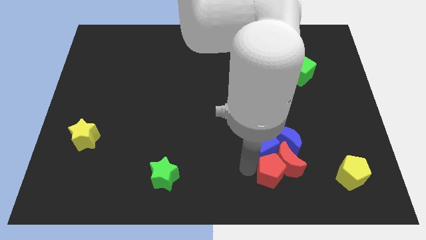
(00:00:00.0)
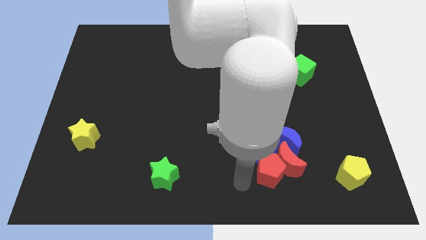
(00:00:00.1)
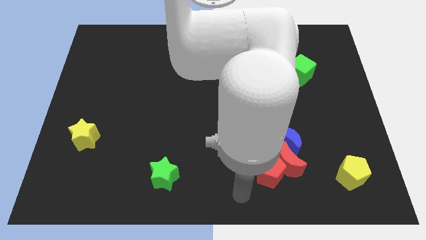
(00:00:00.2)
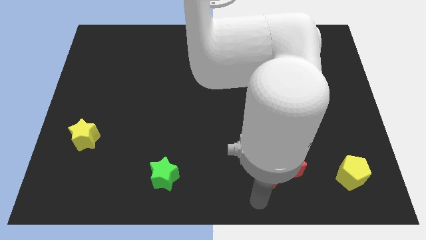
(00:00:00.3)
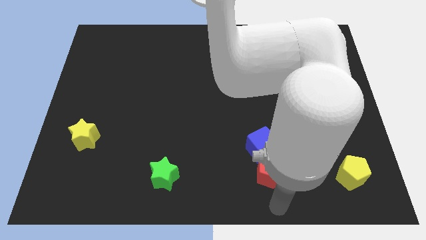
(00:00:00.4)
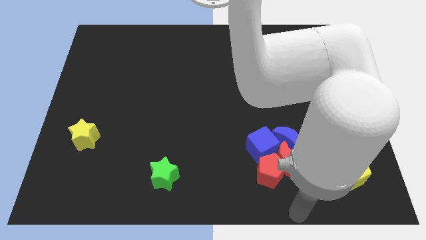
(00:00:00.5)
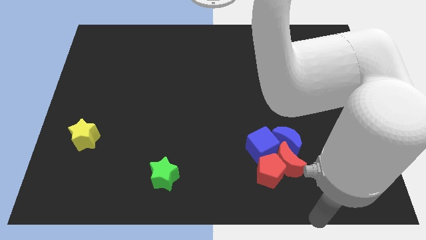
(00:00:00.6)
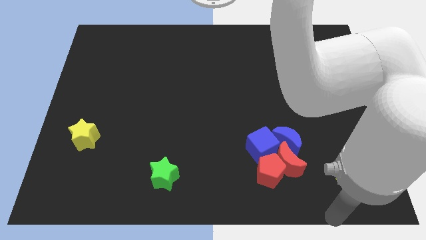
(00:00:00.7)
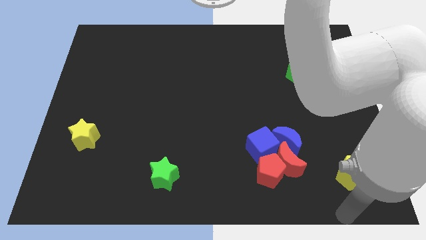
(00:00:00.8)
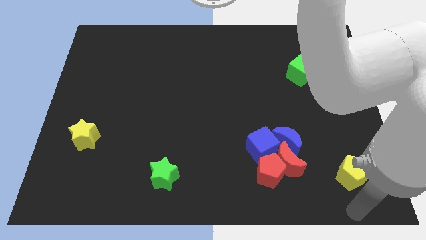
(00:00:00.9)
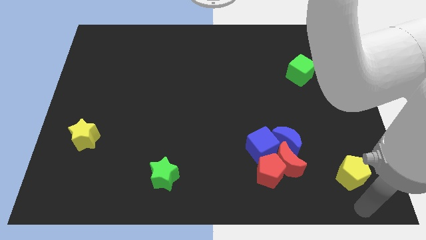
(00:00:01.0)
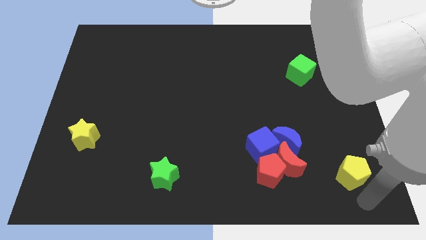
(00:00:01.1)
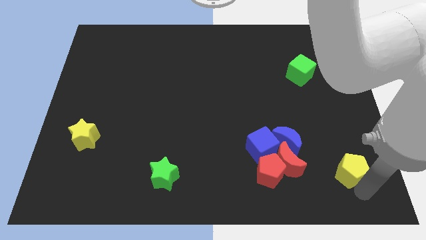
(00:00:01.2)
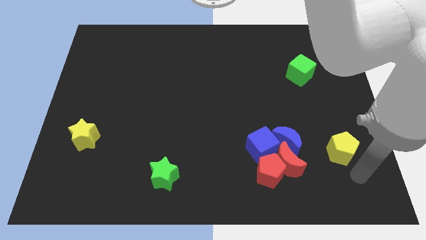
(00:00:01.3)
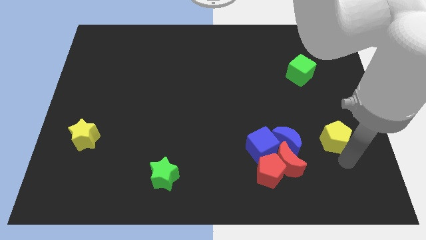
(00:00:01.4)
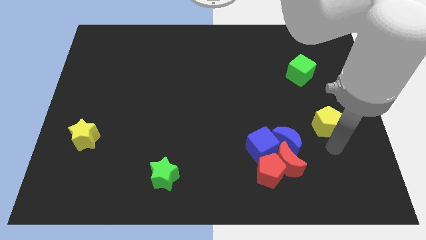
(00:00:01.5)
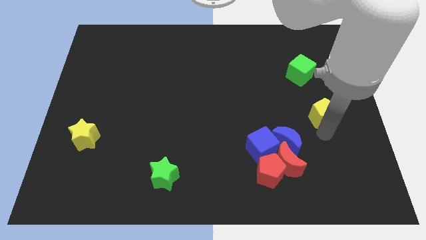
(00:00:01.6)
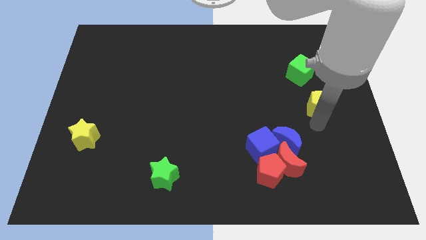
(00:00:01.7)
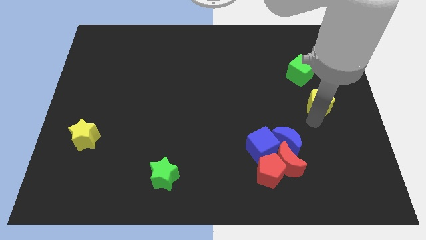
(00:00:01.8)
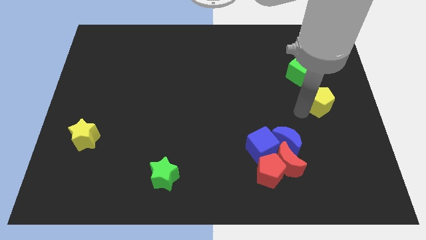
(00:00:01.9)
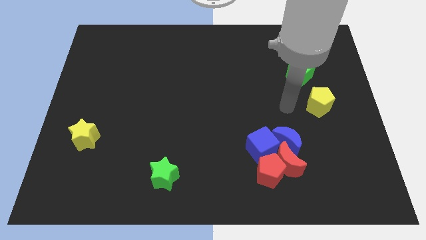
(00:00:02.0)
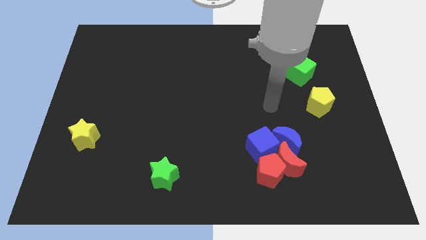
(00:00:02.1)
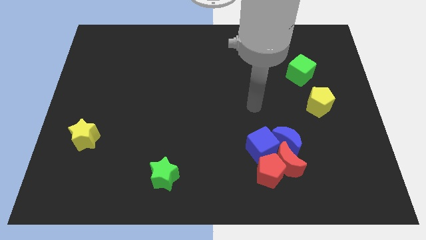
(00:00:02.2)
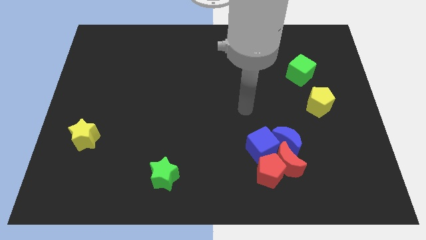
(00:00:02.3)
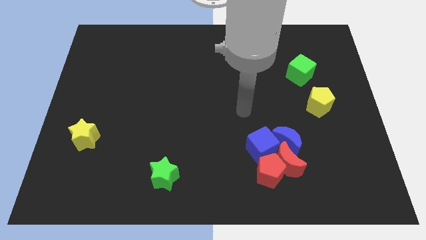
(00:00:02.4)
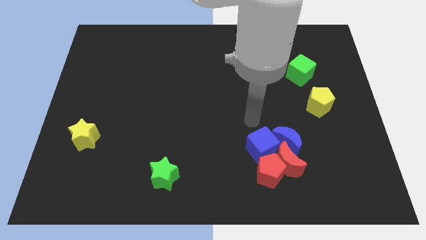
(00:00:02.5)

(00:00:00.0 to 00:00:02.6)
push the yellow pentagon towards the top side of the board

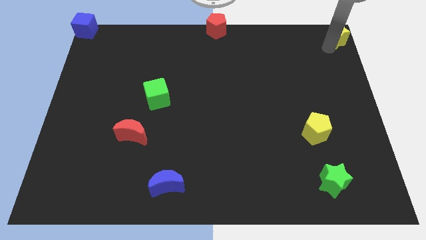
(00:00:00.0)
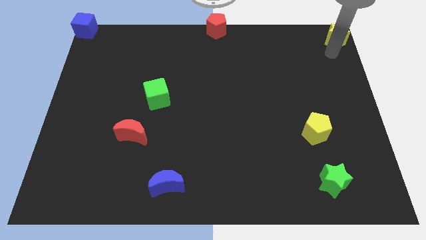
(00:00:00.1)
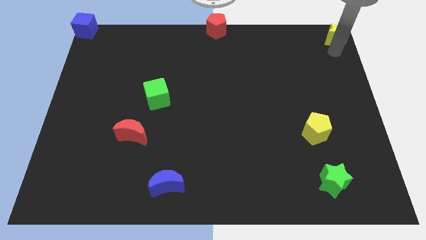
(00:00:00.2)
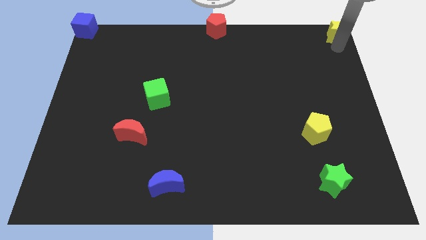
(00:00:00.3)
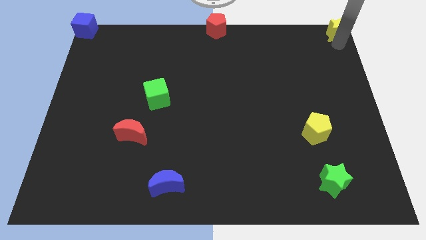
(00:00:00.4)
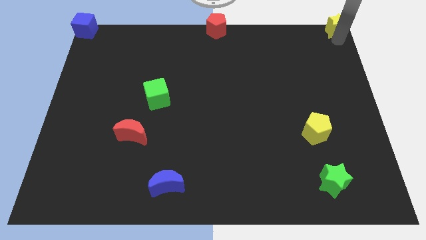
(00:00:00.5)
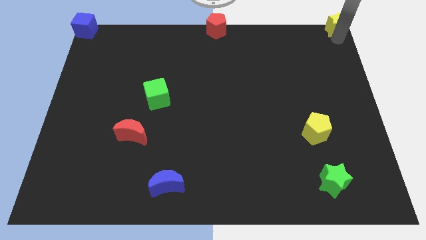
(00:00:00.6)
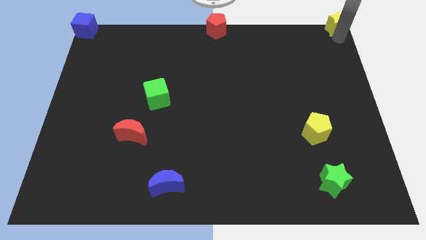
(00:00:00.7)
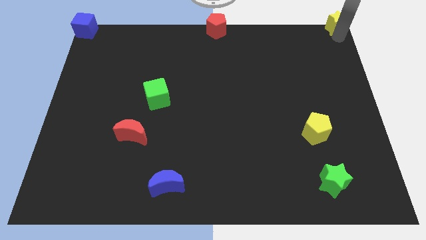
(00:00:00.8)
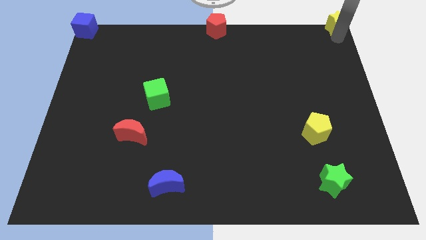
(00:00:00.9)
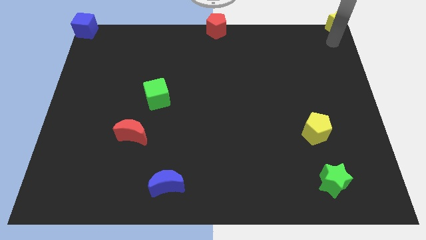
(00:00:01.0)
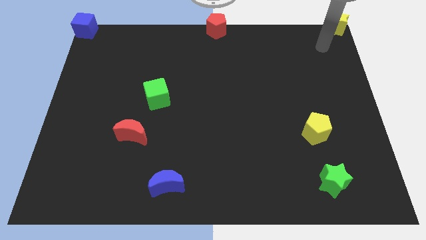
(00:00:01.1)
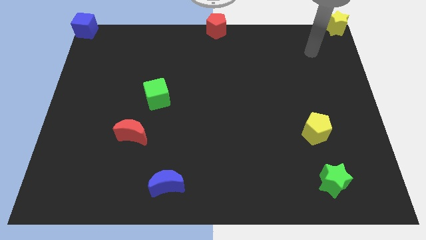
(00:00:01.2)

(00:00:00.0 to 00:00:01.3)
place the yellow star at the top right corner

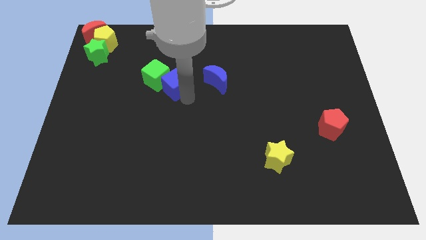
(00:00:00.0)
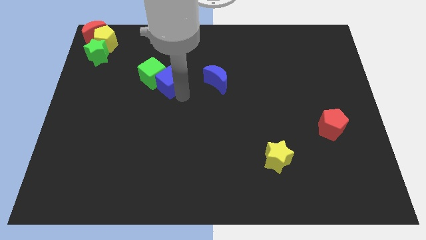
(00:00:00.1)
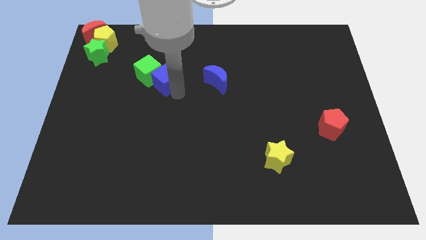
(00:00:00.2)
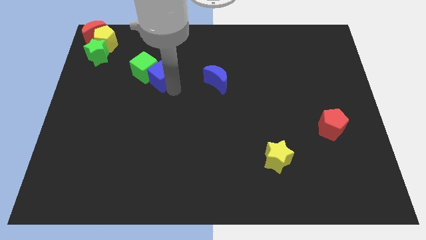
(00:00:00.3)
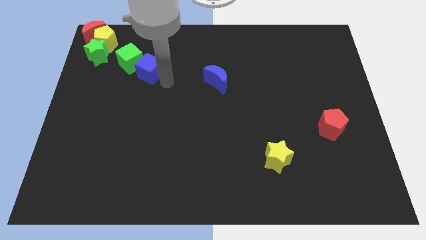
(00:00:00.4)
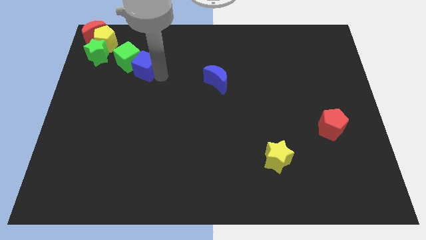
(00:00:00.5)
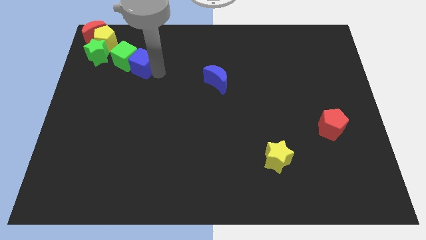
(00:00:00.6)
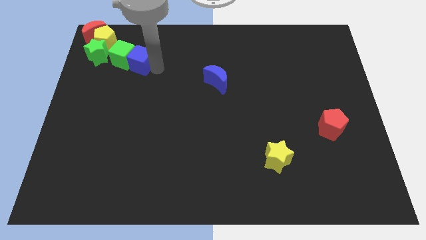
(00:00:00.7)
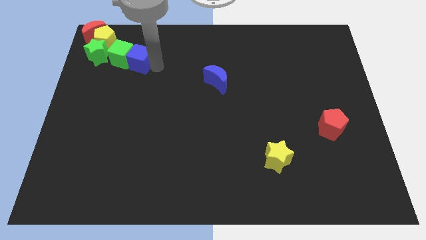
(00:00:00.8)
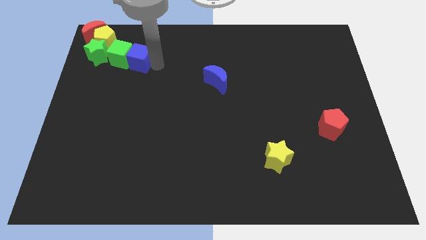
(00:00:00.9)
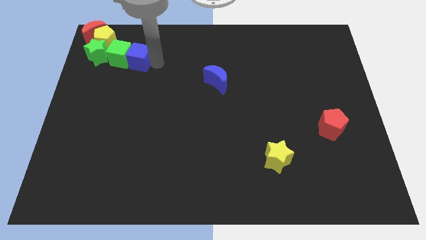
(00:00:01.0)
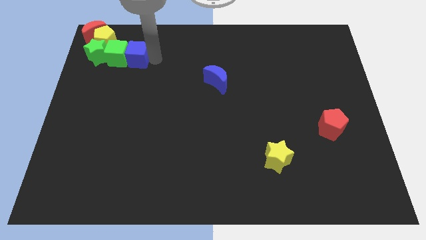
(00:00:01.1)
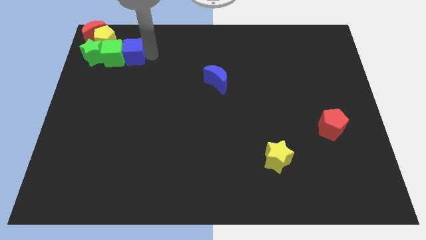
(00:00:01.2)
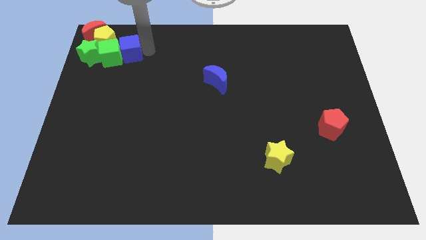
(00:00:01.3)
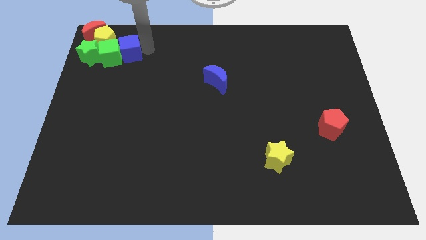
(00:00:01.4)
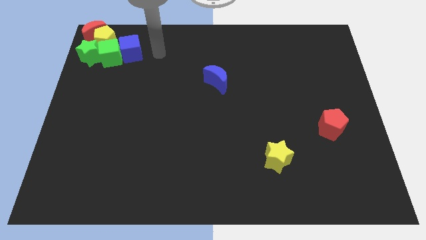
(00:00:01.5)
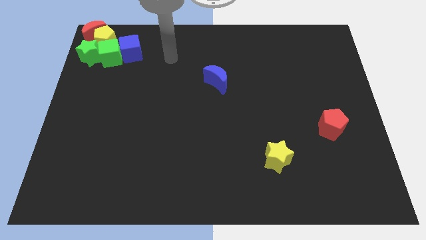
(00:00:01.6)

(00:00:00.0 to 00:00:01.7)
move the green cube along with the blue cube into the green star

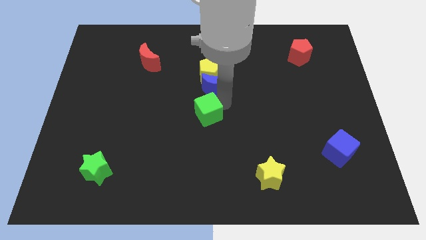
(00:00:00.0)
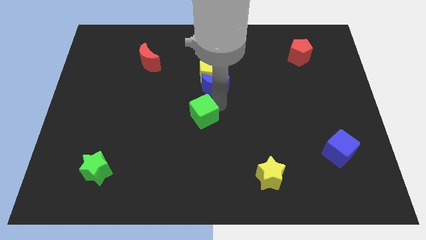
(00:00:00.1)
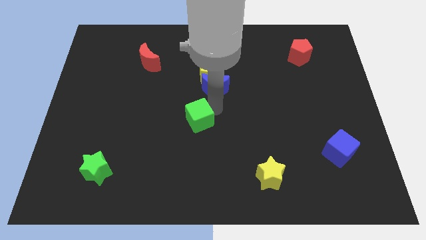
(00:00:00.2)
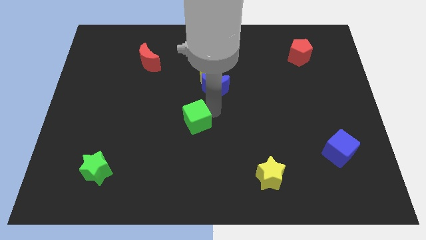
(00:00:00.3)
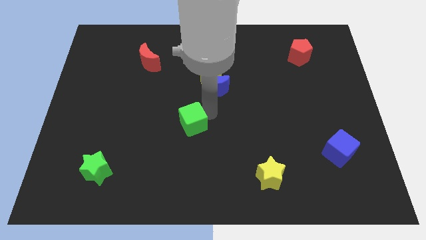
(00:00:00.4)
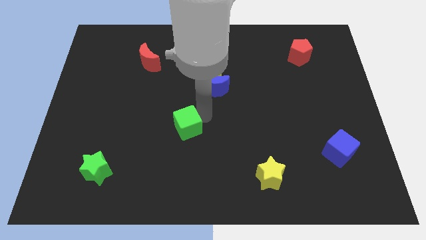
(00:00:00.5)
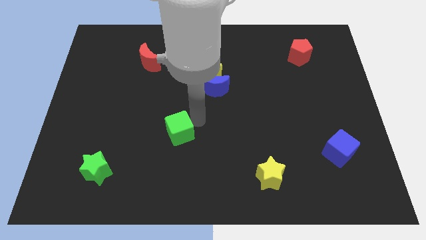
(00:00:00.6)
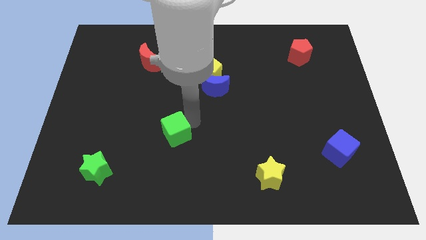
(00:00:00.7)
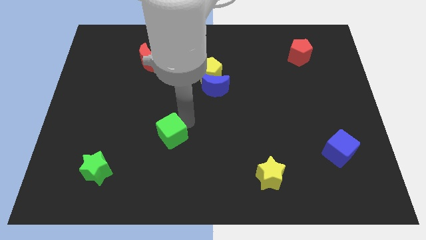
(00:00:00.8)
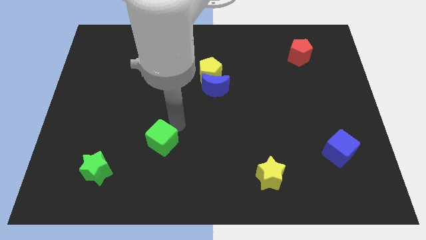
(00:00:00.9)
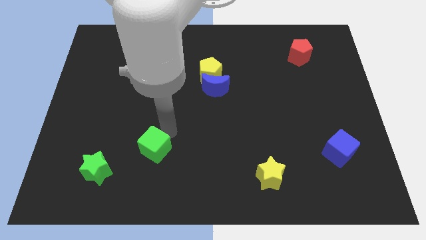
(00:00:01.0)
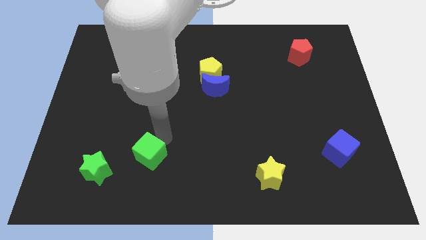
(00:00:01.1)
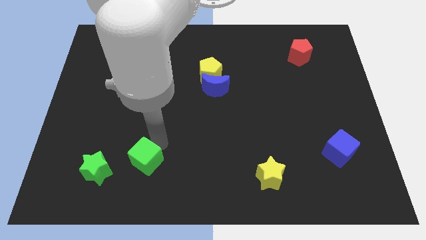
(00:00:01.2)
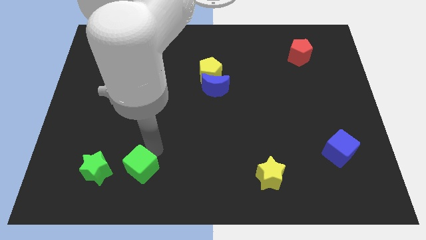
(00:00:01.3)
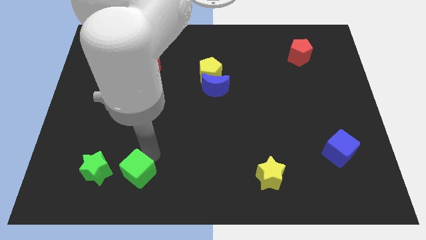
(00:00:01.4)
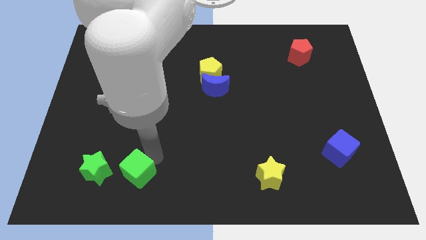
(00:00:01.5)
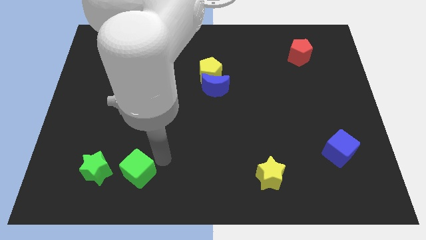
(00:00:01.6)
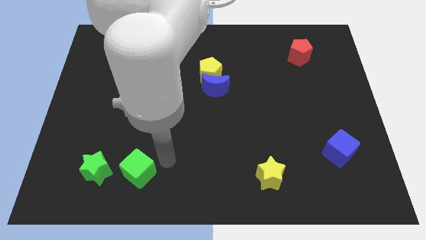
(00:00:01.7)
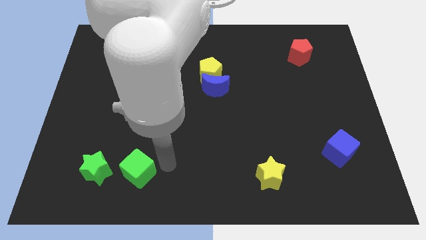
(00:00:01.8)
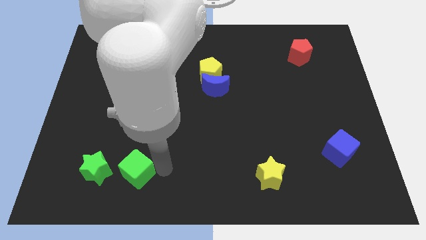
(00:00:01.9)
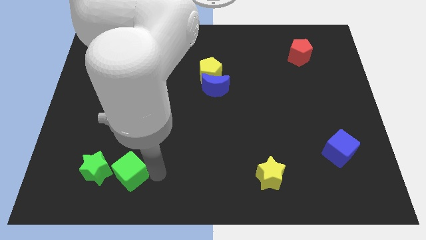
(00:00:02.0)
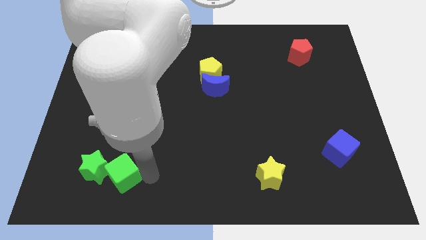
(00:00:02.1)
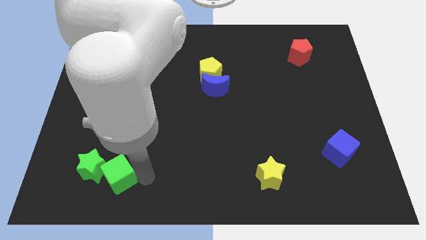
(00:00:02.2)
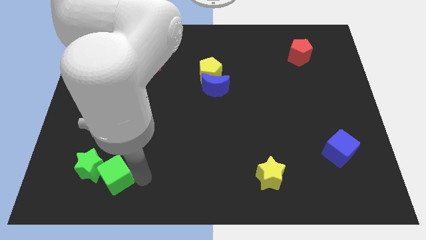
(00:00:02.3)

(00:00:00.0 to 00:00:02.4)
push the green cube to the right of the green star

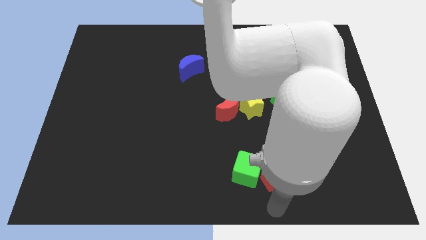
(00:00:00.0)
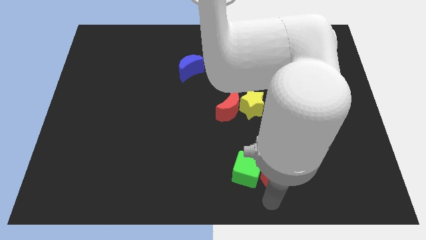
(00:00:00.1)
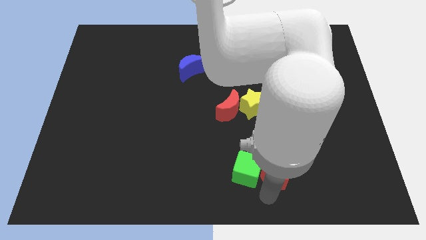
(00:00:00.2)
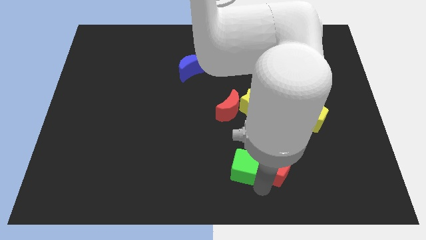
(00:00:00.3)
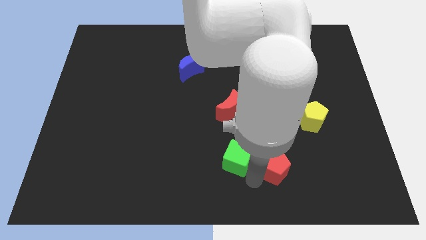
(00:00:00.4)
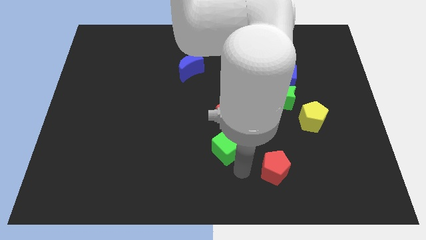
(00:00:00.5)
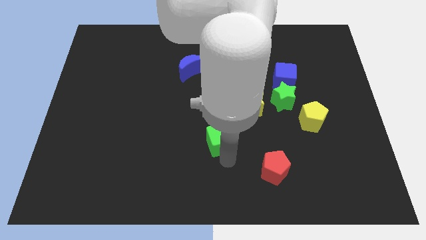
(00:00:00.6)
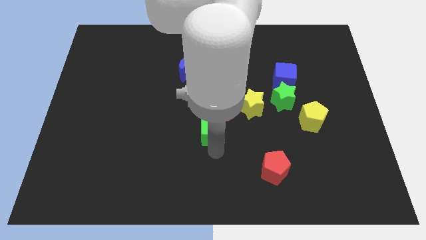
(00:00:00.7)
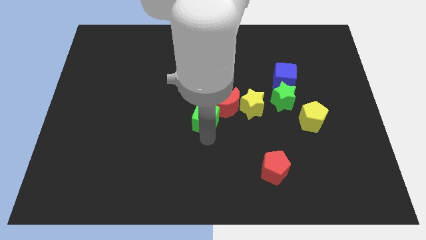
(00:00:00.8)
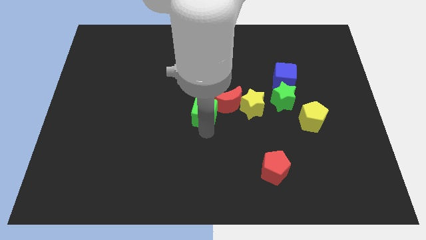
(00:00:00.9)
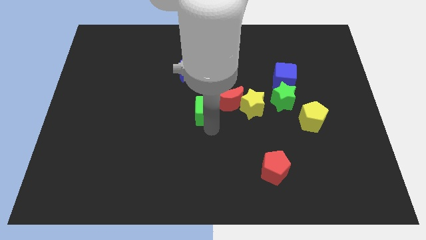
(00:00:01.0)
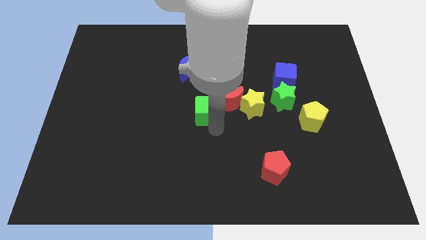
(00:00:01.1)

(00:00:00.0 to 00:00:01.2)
push green cube into red moon
